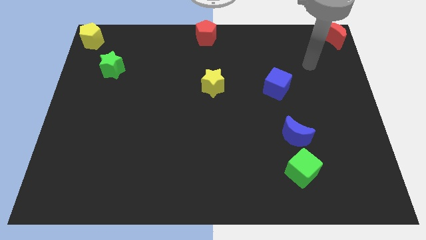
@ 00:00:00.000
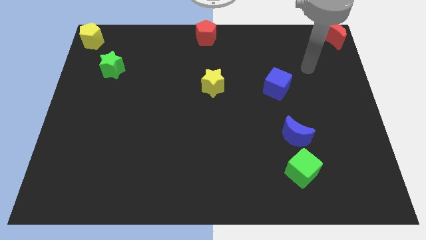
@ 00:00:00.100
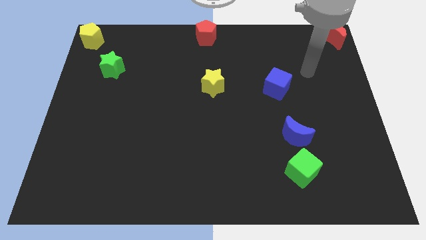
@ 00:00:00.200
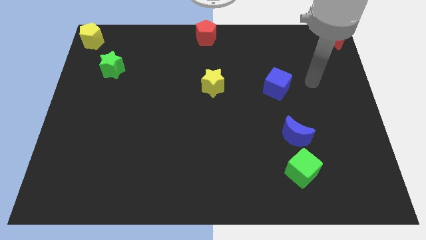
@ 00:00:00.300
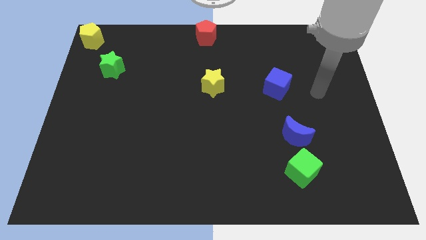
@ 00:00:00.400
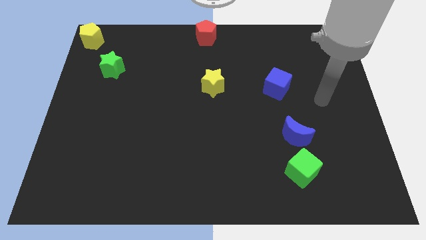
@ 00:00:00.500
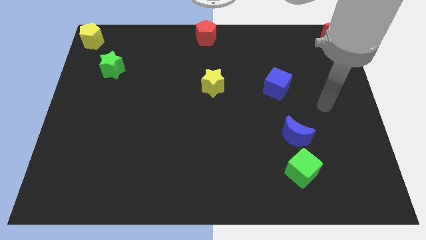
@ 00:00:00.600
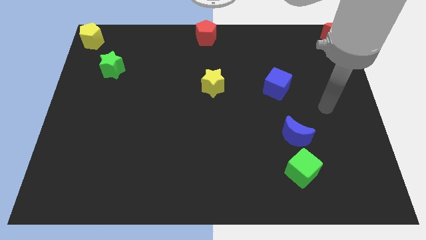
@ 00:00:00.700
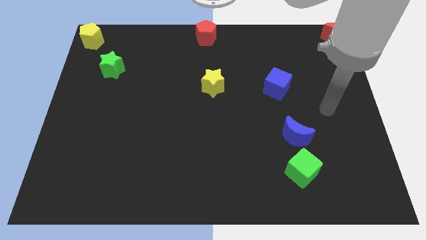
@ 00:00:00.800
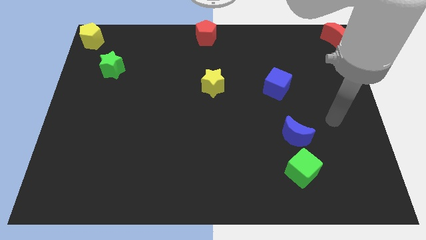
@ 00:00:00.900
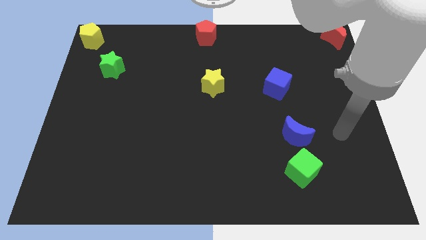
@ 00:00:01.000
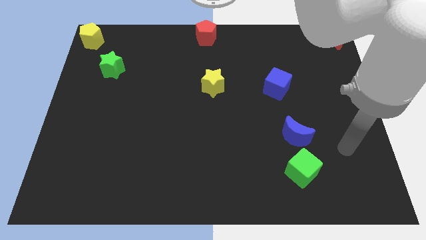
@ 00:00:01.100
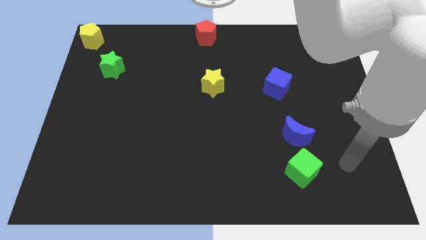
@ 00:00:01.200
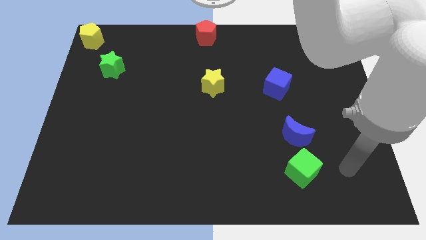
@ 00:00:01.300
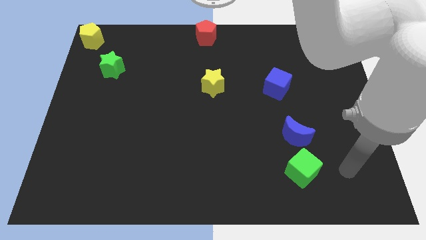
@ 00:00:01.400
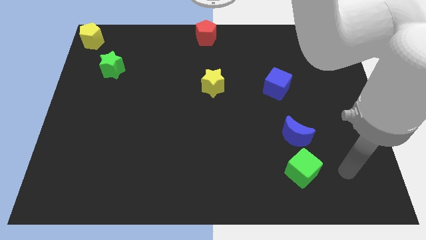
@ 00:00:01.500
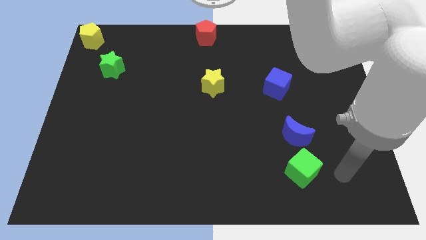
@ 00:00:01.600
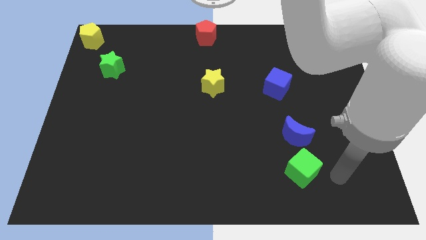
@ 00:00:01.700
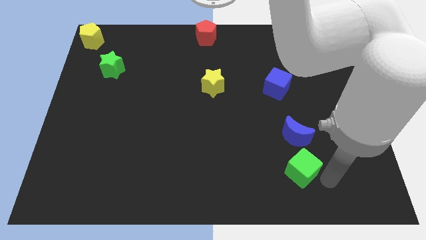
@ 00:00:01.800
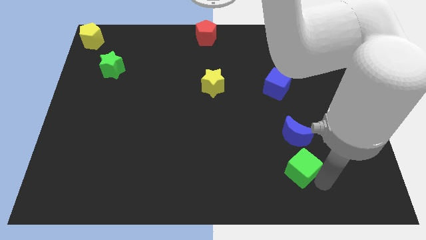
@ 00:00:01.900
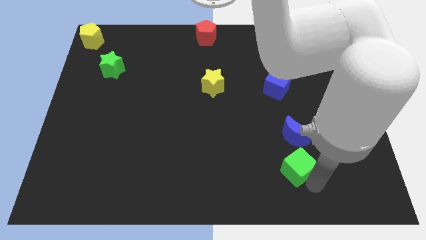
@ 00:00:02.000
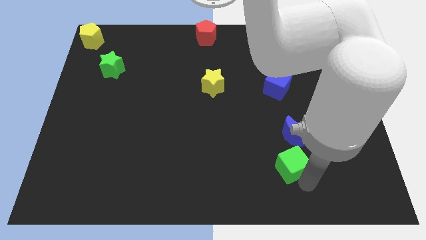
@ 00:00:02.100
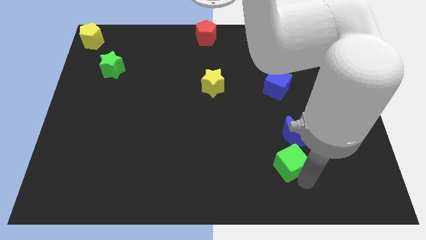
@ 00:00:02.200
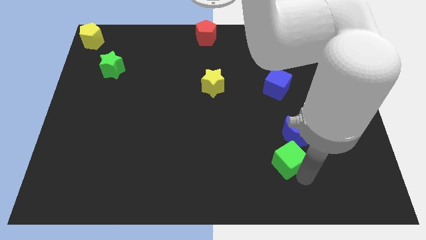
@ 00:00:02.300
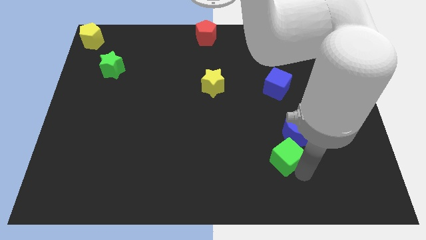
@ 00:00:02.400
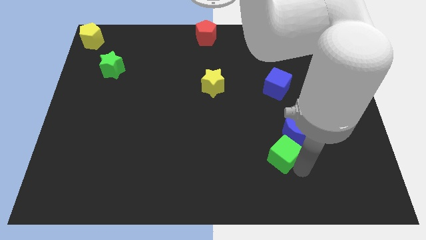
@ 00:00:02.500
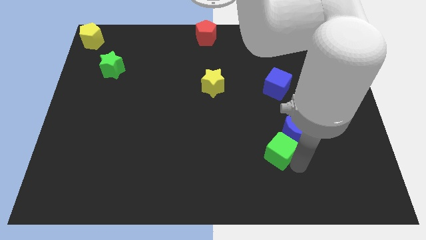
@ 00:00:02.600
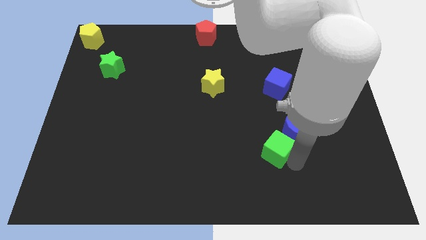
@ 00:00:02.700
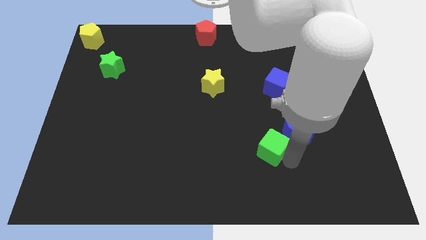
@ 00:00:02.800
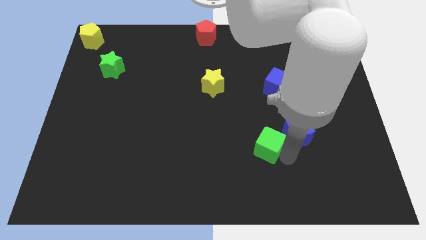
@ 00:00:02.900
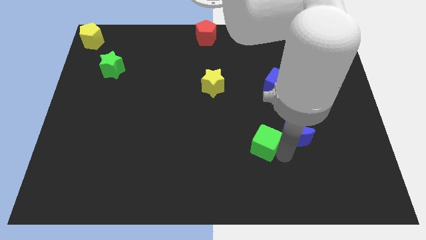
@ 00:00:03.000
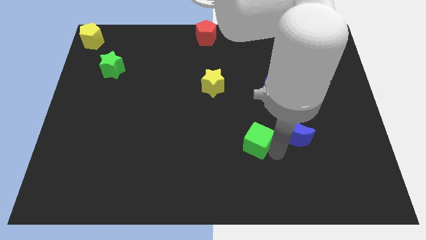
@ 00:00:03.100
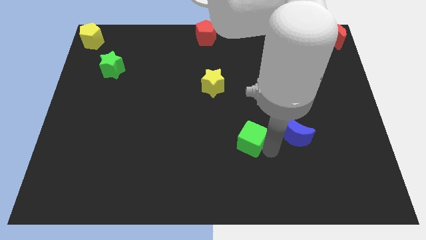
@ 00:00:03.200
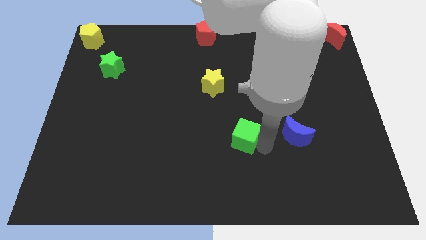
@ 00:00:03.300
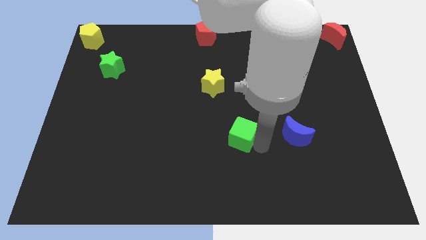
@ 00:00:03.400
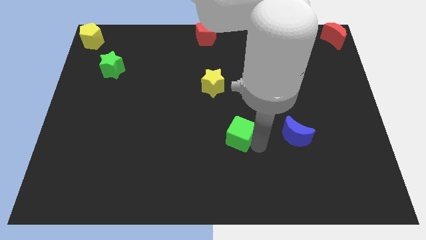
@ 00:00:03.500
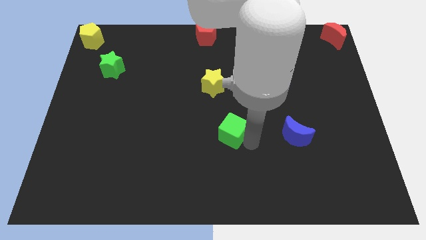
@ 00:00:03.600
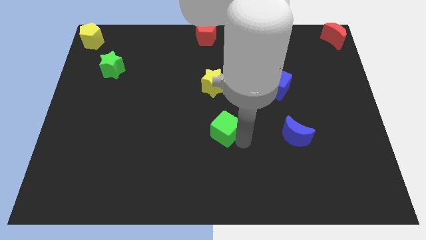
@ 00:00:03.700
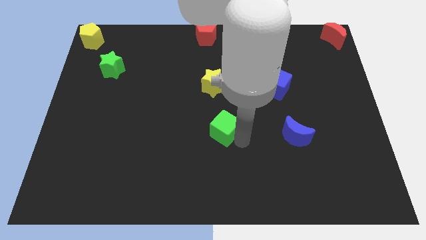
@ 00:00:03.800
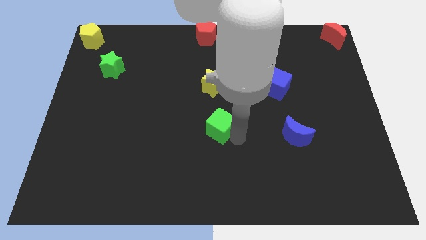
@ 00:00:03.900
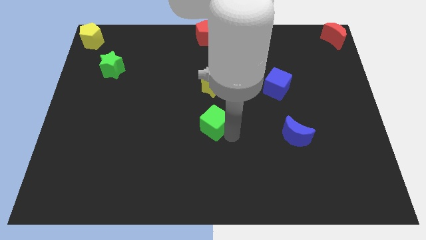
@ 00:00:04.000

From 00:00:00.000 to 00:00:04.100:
push the green cube to the bottom of the yellow star

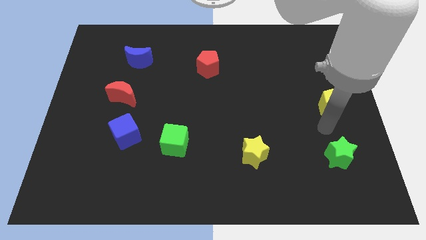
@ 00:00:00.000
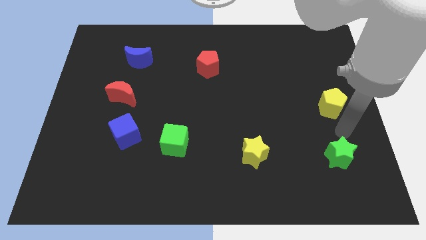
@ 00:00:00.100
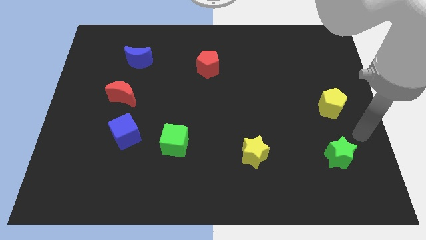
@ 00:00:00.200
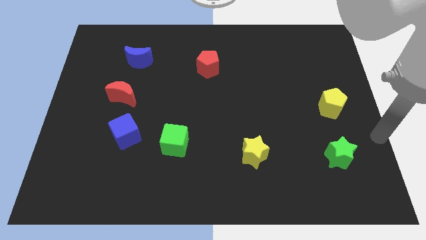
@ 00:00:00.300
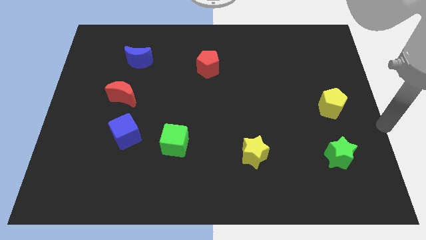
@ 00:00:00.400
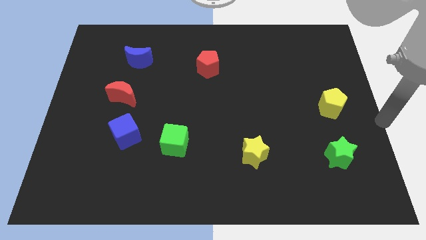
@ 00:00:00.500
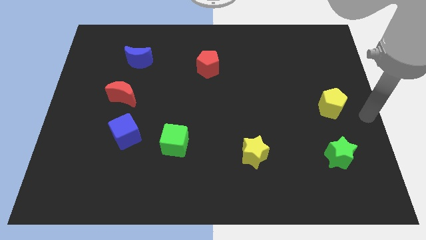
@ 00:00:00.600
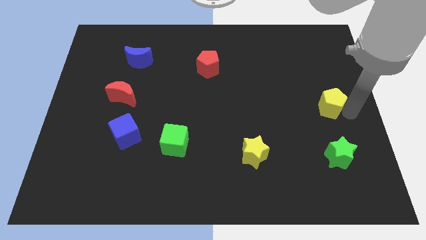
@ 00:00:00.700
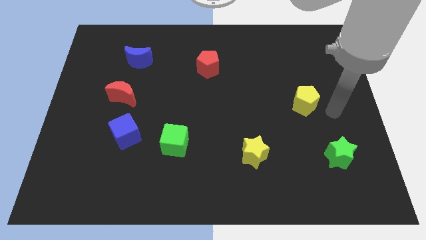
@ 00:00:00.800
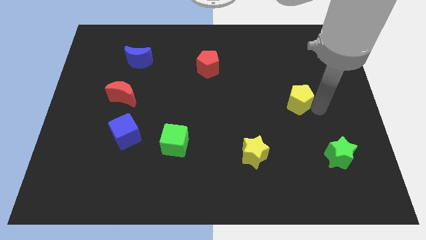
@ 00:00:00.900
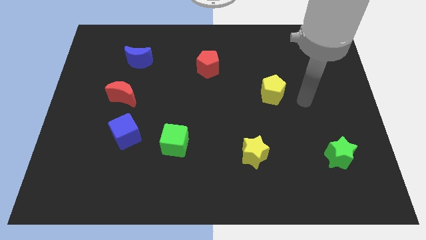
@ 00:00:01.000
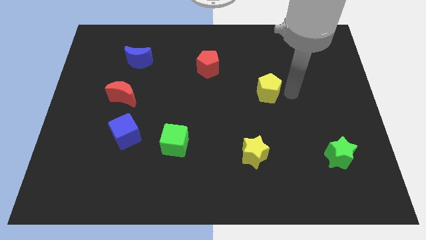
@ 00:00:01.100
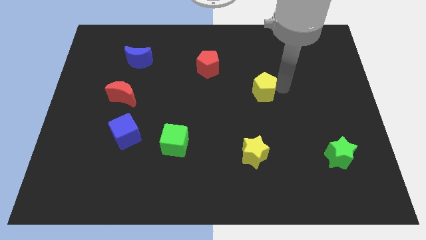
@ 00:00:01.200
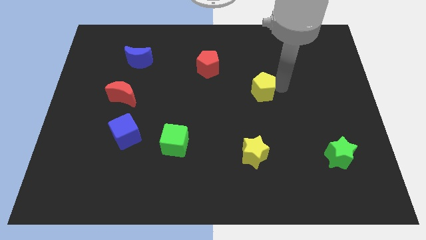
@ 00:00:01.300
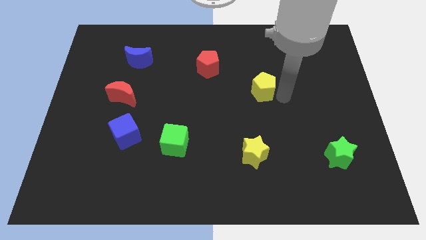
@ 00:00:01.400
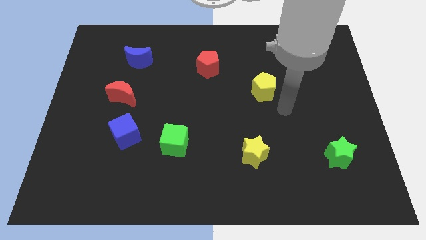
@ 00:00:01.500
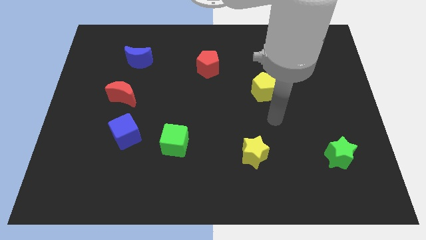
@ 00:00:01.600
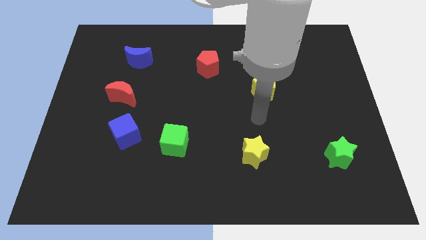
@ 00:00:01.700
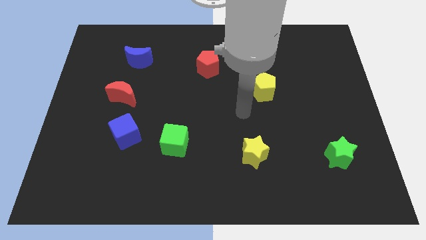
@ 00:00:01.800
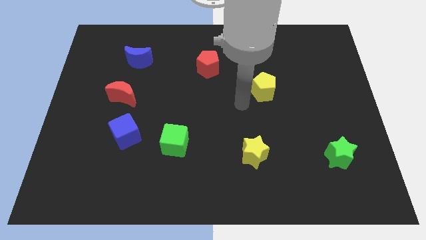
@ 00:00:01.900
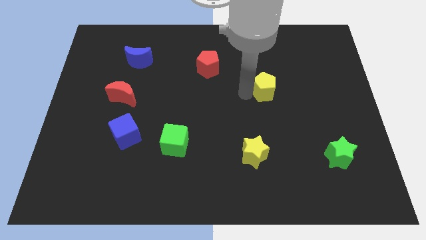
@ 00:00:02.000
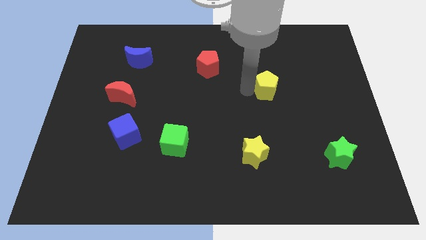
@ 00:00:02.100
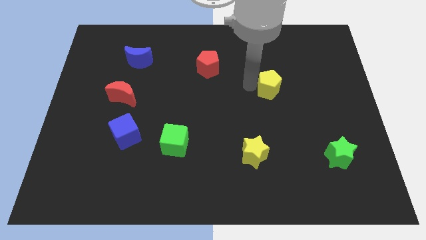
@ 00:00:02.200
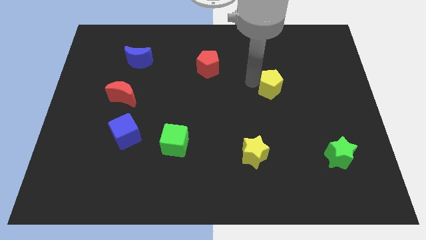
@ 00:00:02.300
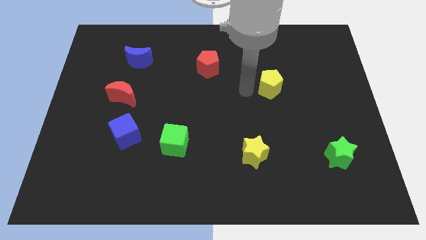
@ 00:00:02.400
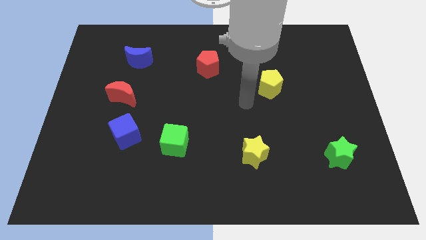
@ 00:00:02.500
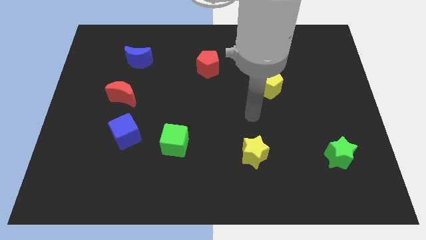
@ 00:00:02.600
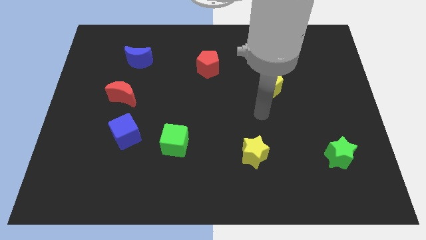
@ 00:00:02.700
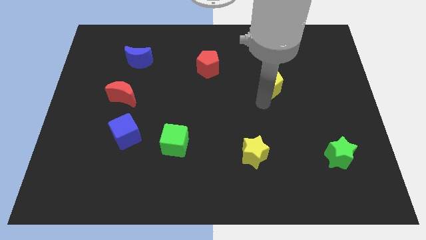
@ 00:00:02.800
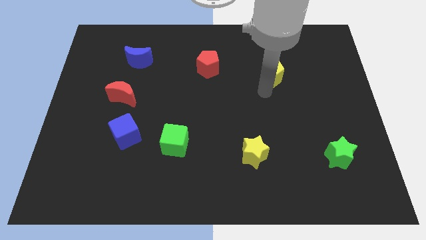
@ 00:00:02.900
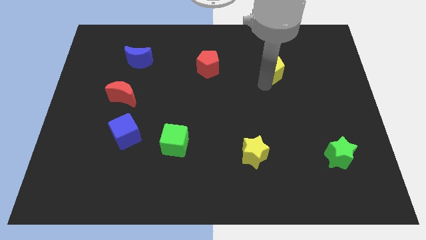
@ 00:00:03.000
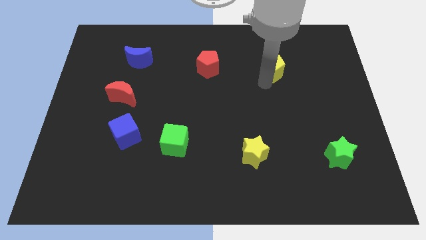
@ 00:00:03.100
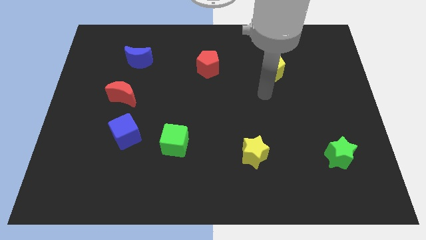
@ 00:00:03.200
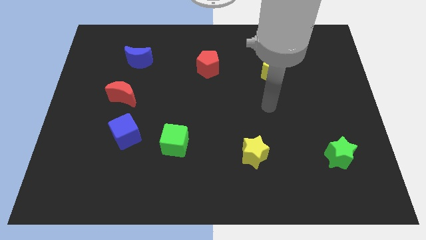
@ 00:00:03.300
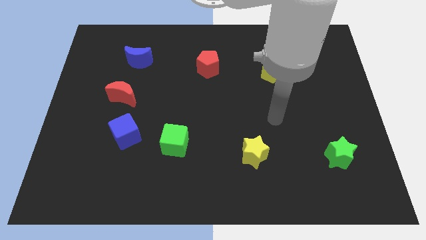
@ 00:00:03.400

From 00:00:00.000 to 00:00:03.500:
push the yellow pentagon to the right of the red pentagon

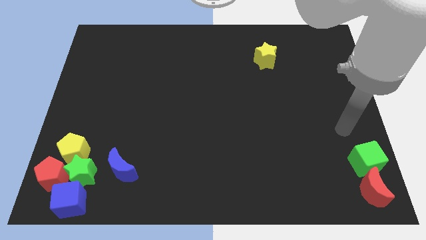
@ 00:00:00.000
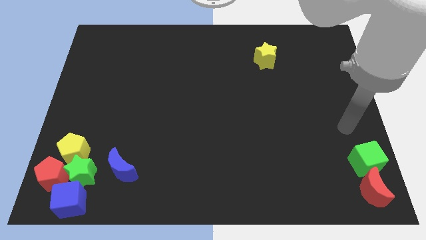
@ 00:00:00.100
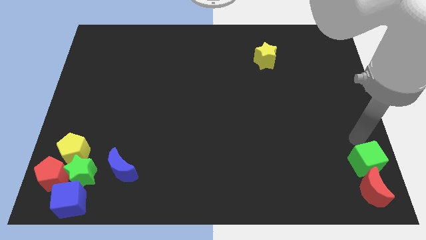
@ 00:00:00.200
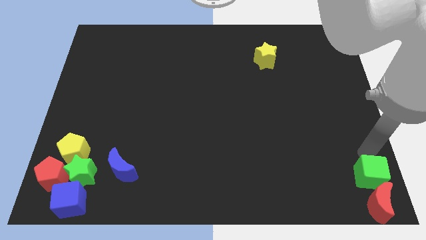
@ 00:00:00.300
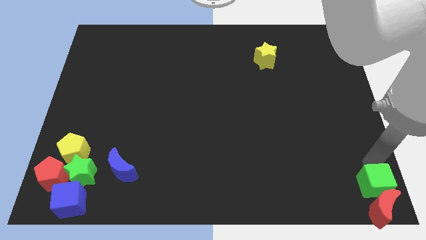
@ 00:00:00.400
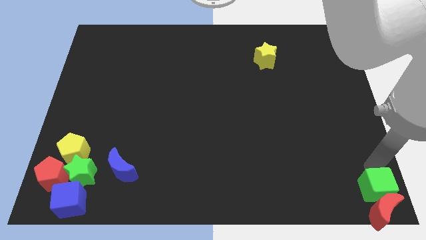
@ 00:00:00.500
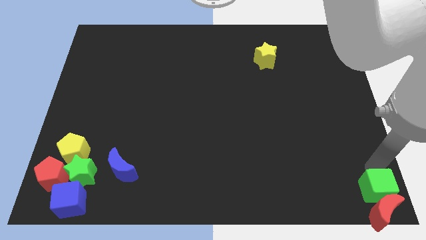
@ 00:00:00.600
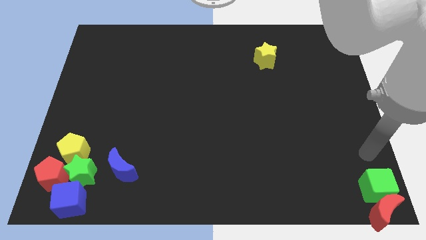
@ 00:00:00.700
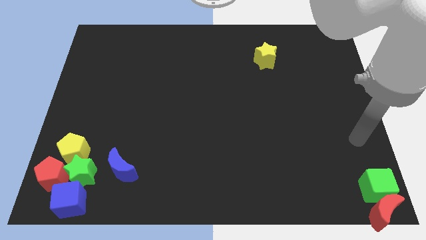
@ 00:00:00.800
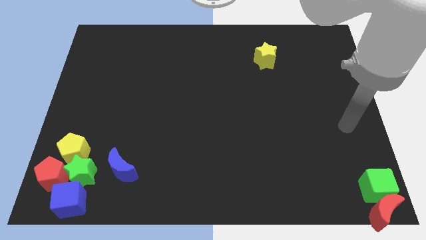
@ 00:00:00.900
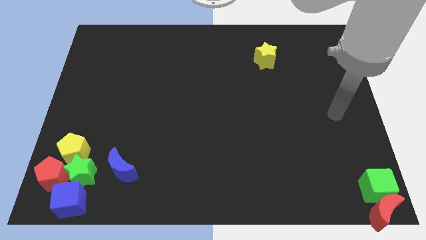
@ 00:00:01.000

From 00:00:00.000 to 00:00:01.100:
slide green cube along with red moon to the bottom right

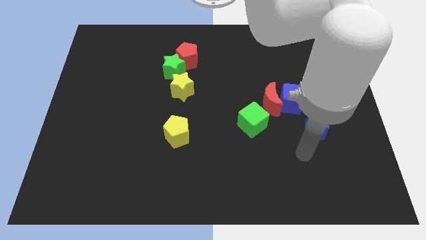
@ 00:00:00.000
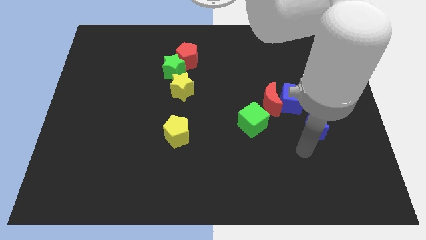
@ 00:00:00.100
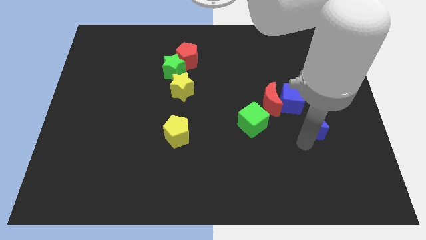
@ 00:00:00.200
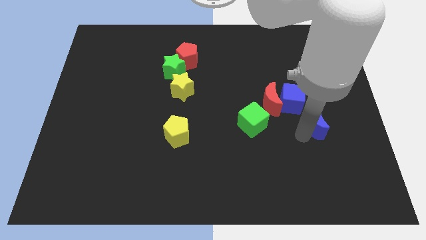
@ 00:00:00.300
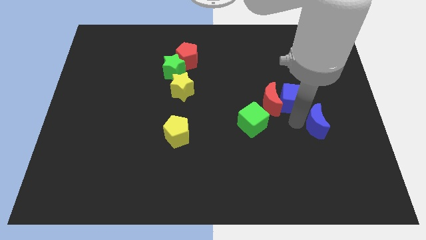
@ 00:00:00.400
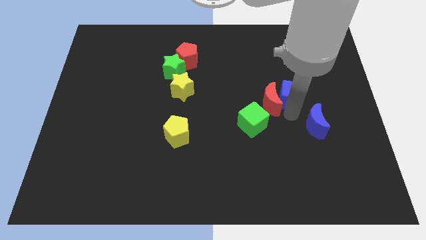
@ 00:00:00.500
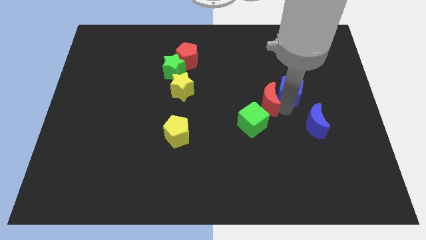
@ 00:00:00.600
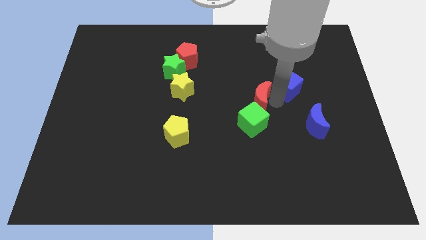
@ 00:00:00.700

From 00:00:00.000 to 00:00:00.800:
push the blue cube slightly to the top
